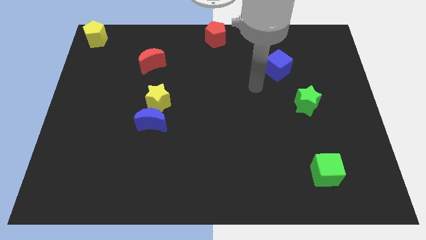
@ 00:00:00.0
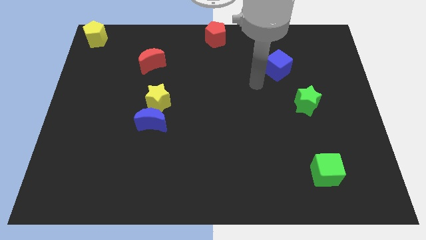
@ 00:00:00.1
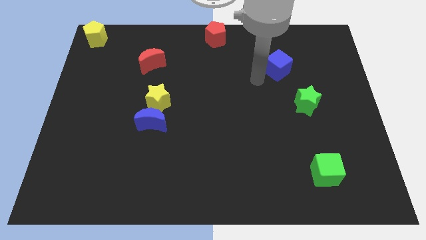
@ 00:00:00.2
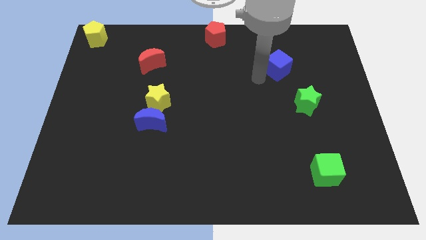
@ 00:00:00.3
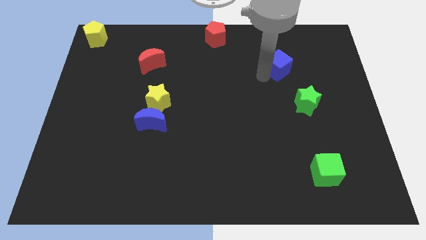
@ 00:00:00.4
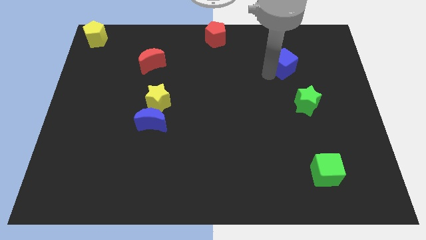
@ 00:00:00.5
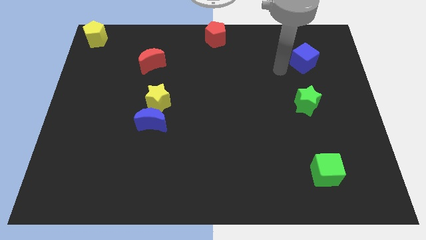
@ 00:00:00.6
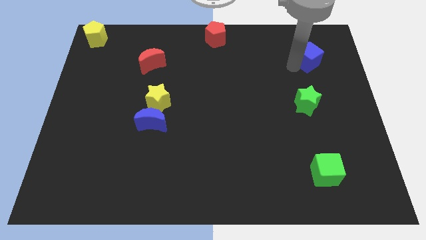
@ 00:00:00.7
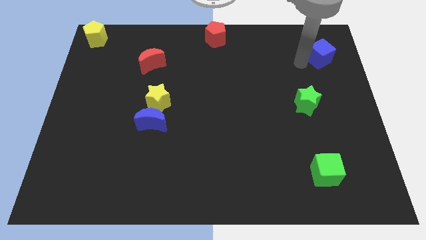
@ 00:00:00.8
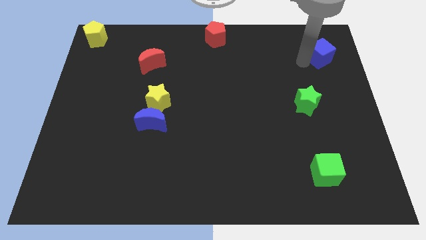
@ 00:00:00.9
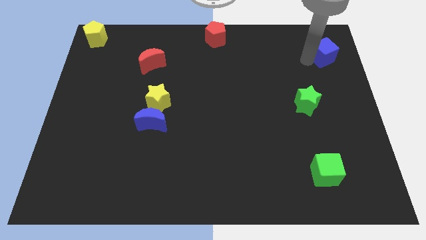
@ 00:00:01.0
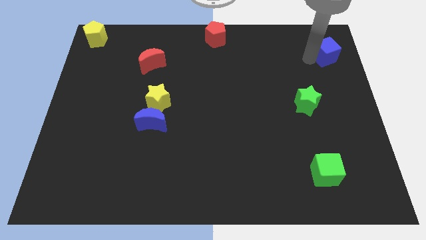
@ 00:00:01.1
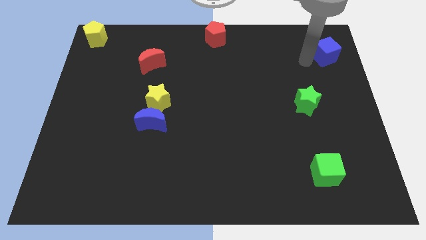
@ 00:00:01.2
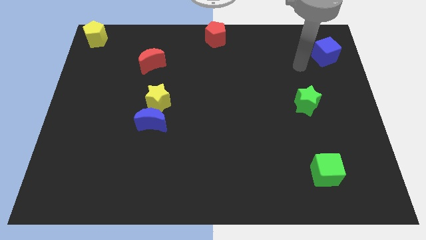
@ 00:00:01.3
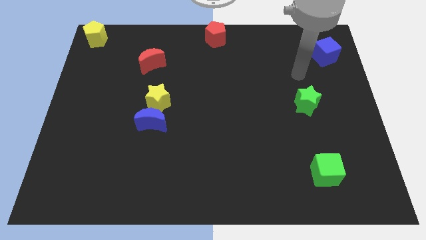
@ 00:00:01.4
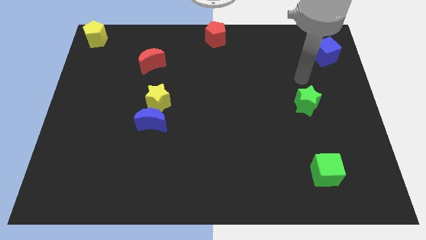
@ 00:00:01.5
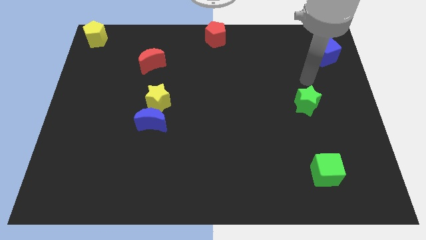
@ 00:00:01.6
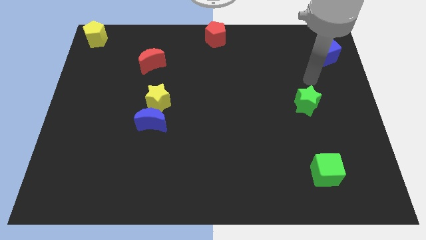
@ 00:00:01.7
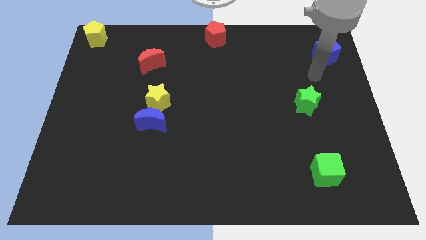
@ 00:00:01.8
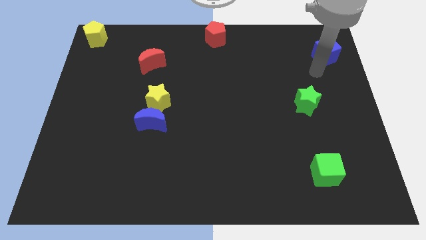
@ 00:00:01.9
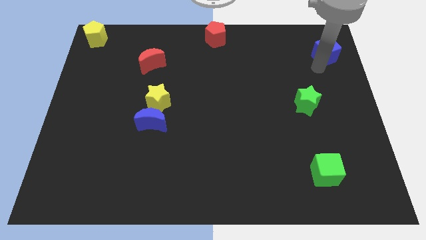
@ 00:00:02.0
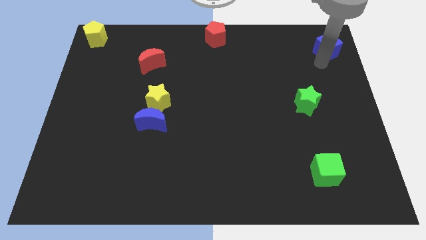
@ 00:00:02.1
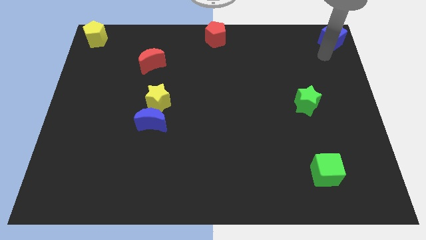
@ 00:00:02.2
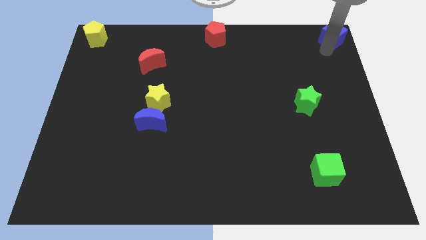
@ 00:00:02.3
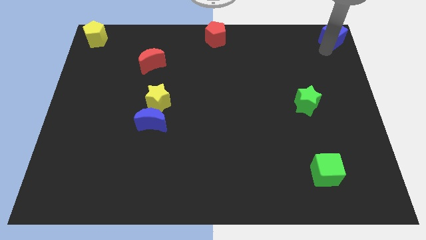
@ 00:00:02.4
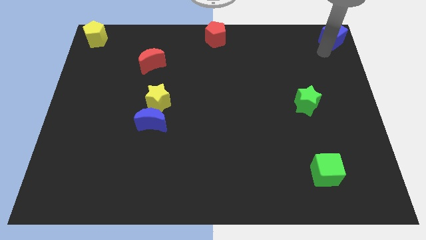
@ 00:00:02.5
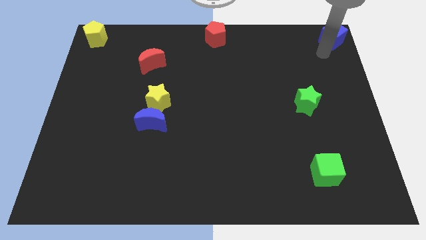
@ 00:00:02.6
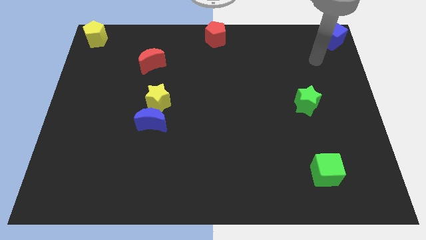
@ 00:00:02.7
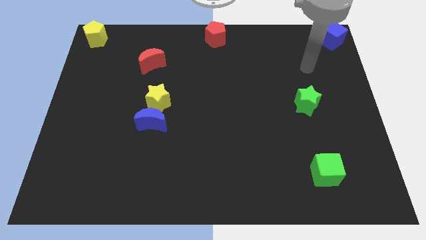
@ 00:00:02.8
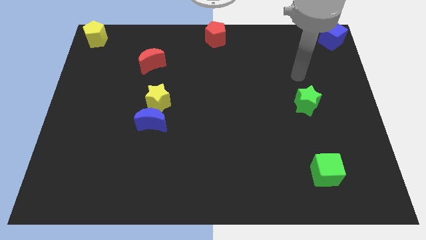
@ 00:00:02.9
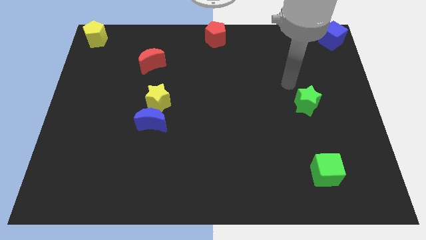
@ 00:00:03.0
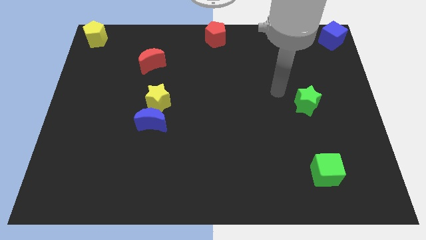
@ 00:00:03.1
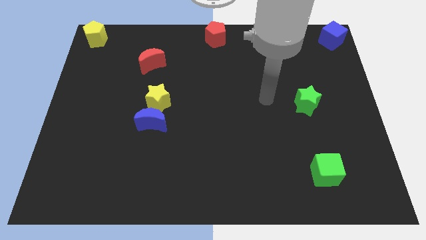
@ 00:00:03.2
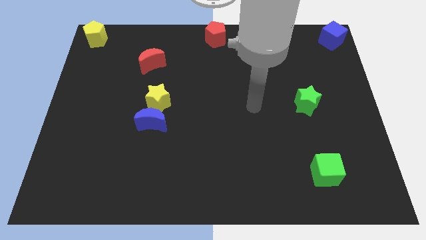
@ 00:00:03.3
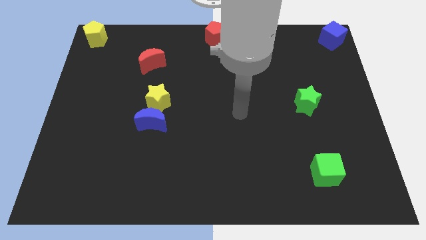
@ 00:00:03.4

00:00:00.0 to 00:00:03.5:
move the blue cube to the top right side corner of the board

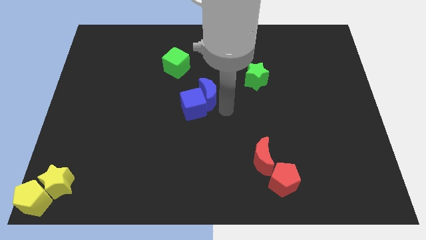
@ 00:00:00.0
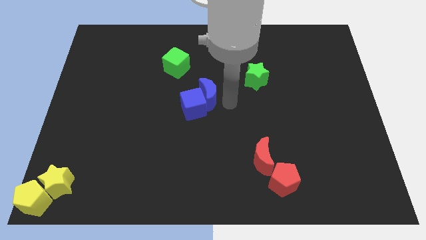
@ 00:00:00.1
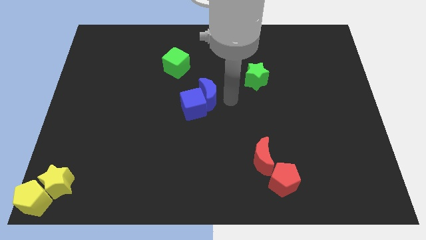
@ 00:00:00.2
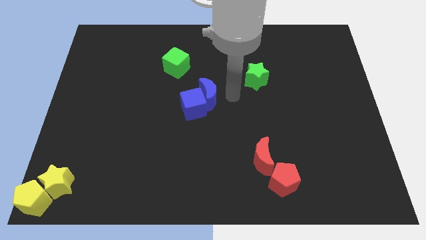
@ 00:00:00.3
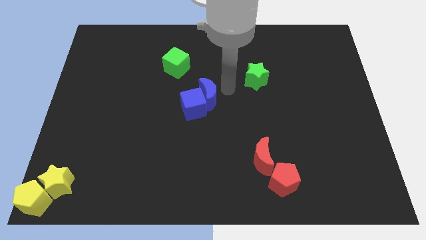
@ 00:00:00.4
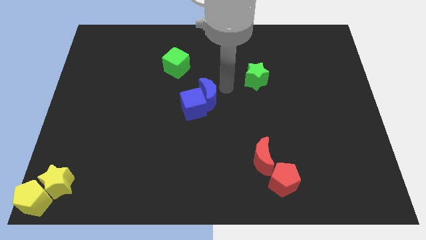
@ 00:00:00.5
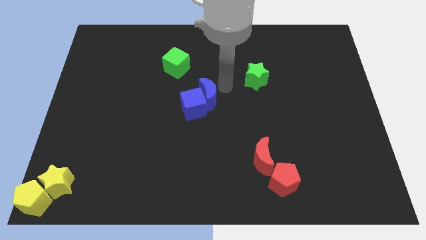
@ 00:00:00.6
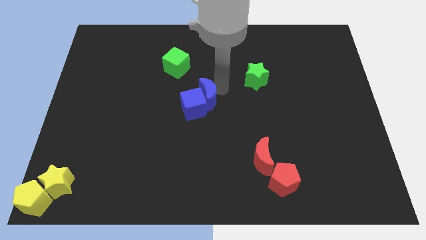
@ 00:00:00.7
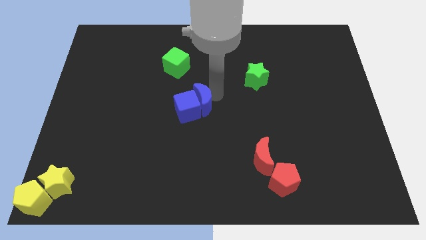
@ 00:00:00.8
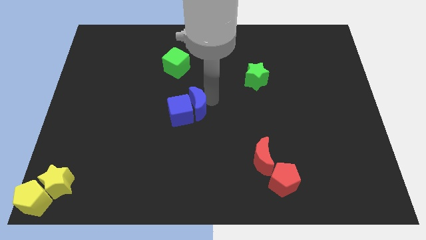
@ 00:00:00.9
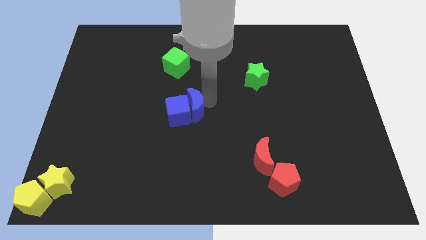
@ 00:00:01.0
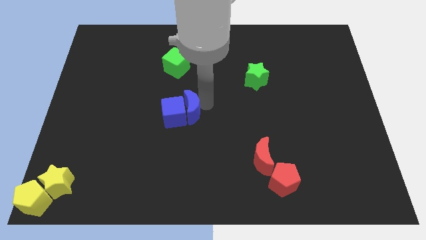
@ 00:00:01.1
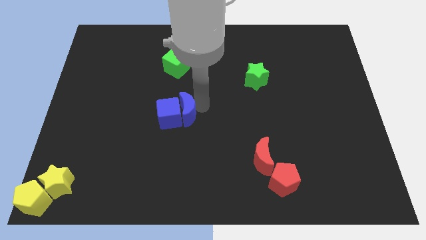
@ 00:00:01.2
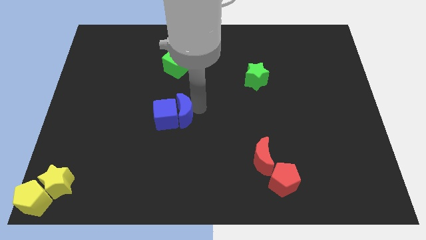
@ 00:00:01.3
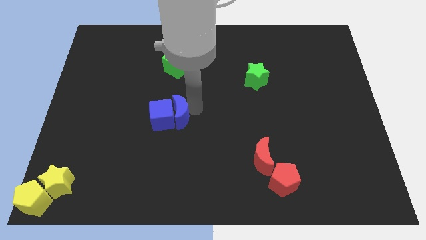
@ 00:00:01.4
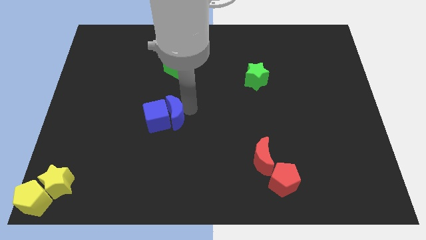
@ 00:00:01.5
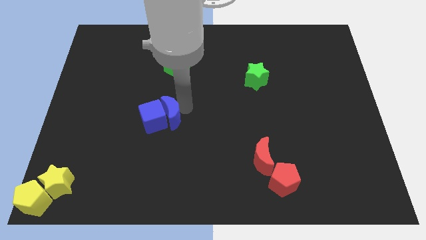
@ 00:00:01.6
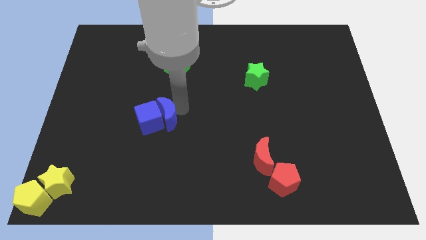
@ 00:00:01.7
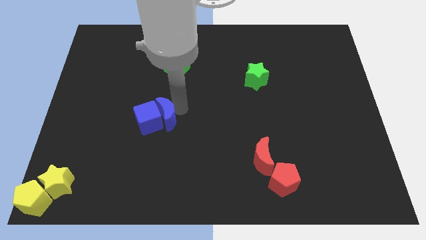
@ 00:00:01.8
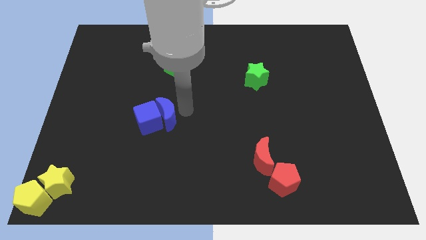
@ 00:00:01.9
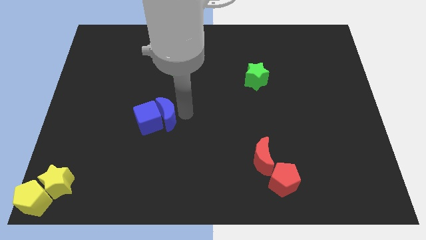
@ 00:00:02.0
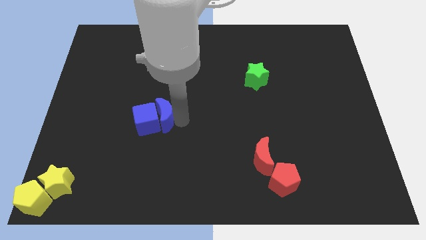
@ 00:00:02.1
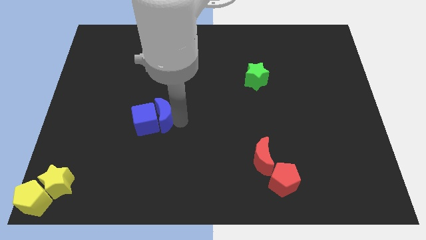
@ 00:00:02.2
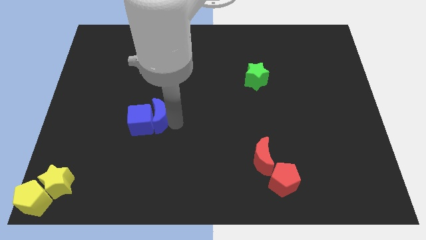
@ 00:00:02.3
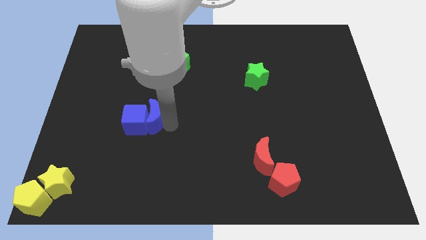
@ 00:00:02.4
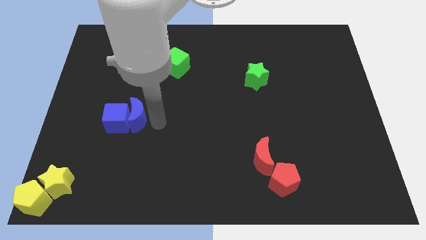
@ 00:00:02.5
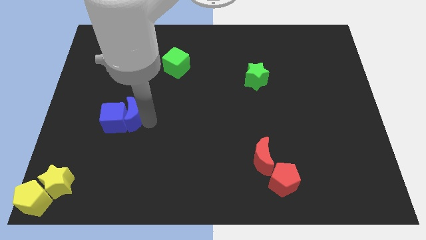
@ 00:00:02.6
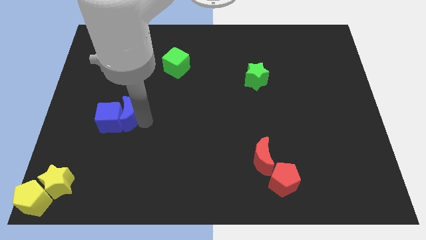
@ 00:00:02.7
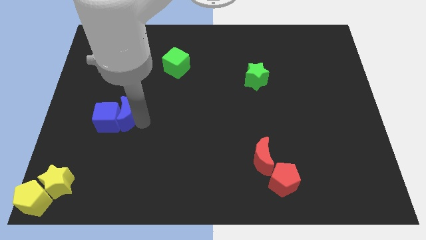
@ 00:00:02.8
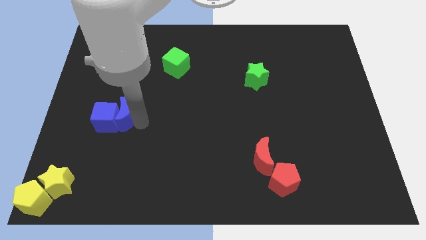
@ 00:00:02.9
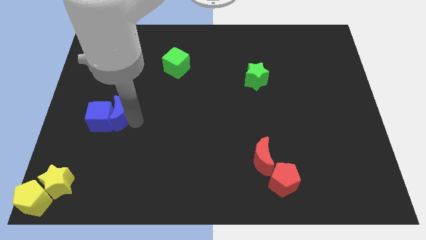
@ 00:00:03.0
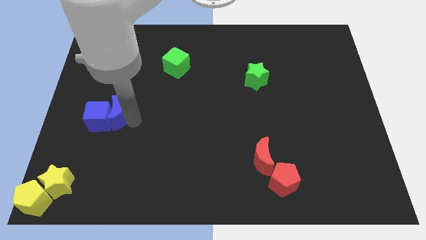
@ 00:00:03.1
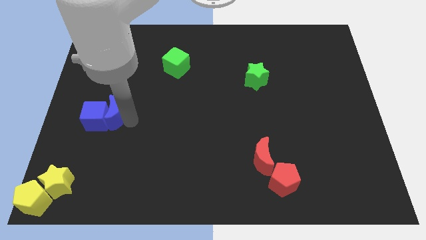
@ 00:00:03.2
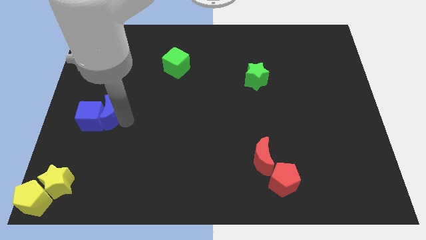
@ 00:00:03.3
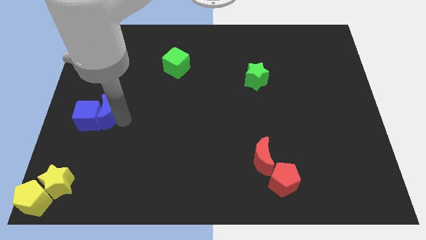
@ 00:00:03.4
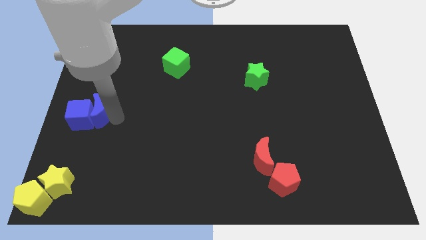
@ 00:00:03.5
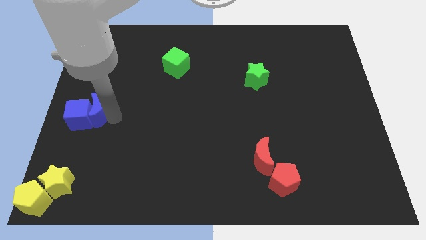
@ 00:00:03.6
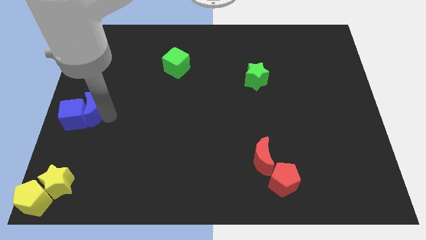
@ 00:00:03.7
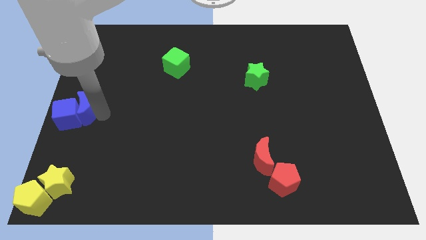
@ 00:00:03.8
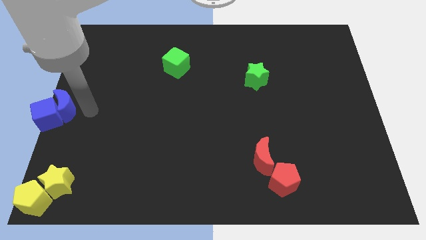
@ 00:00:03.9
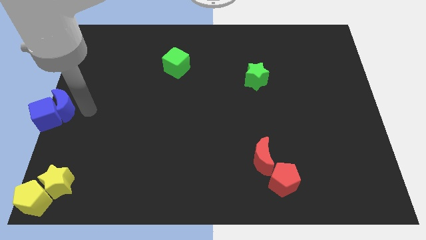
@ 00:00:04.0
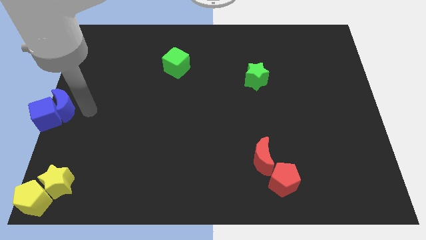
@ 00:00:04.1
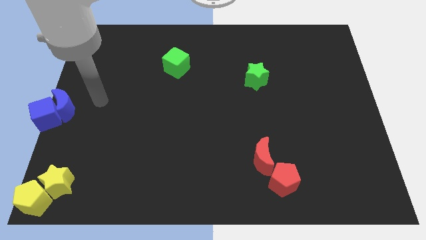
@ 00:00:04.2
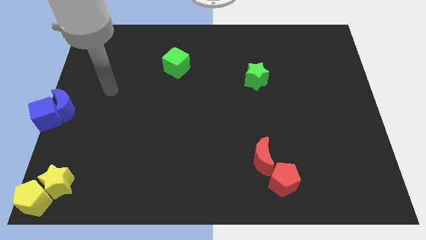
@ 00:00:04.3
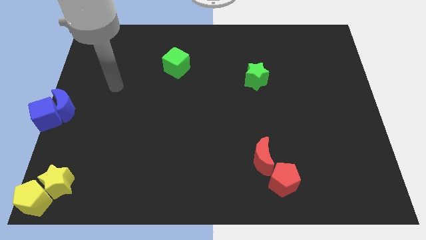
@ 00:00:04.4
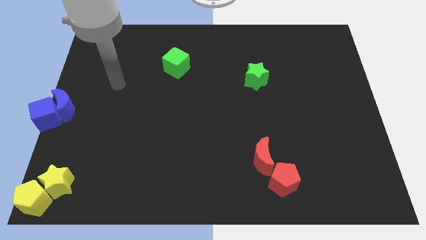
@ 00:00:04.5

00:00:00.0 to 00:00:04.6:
move the blue blocks to the center left of the board

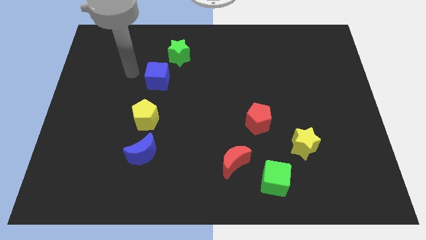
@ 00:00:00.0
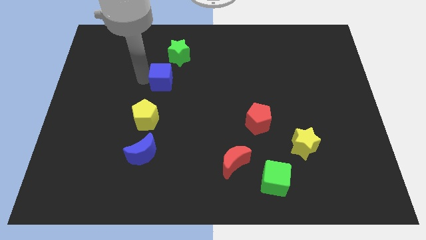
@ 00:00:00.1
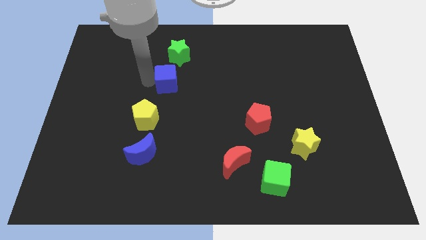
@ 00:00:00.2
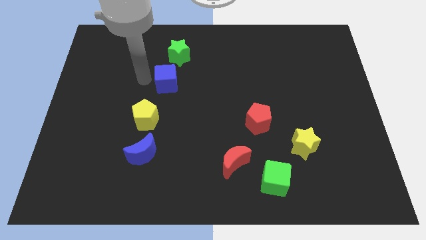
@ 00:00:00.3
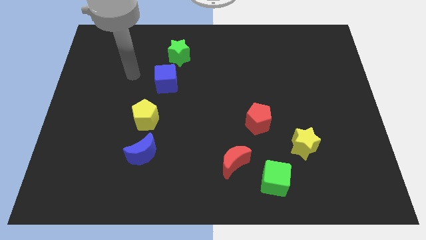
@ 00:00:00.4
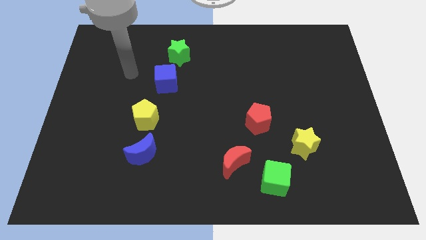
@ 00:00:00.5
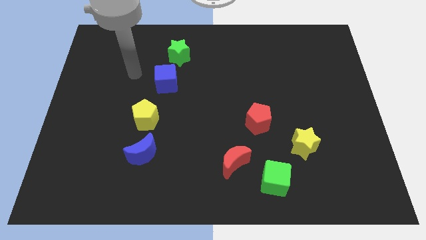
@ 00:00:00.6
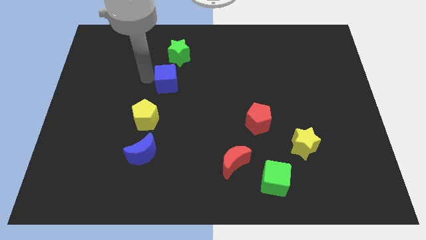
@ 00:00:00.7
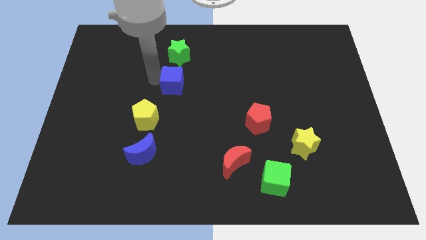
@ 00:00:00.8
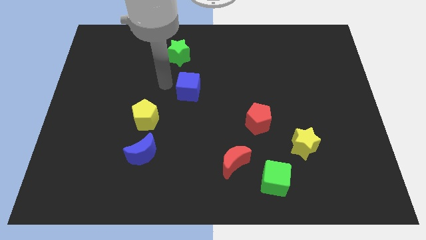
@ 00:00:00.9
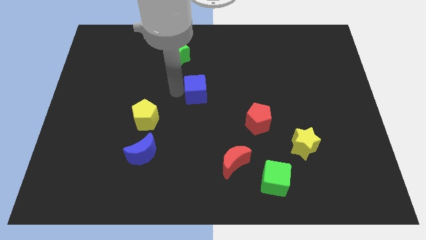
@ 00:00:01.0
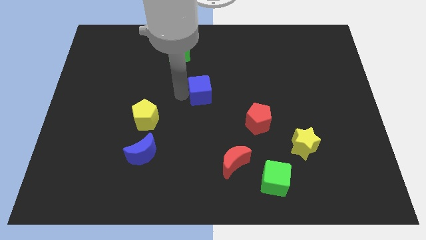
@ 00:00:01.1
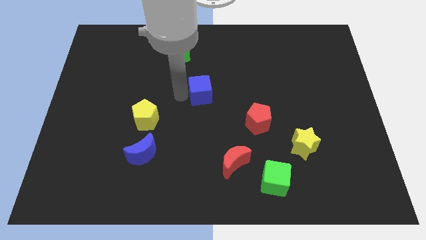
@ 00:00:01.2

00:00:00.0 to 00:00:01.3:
move the blue cube diagonally bottom right to the green star
